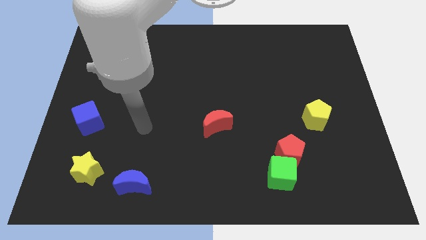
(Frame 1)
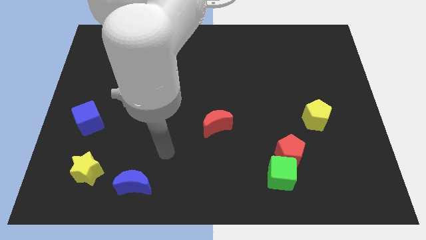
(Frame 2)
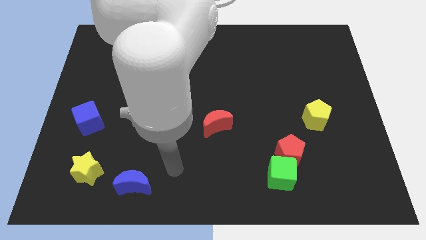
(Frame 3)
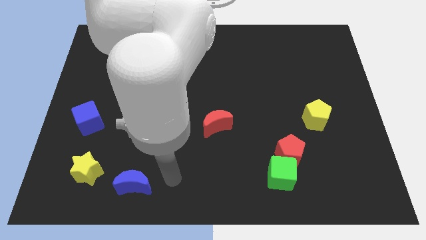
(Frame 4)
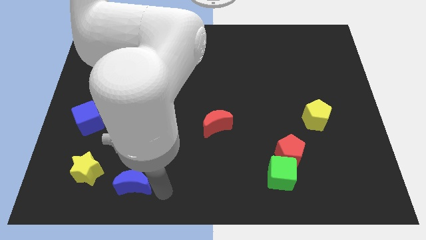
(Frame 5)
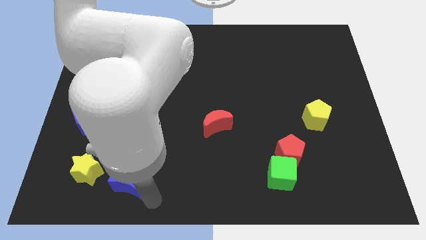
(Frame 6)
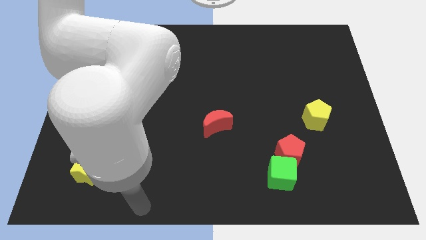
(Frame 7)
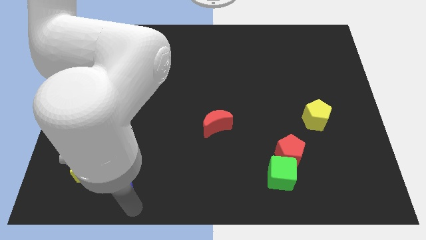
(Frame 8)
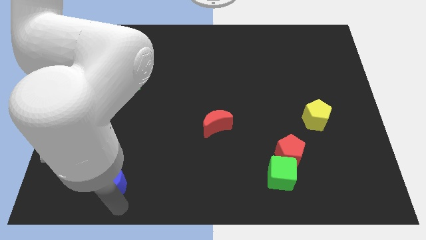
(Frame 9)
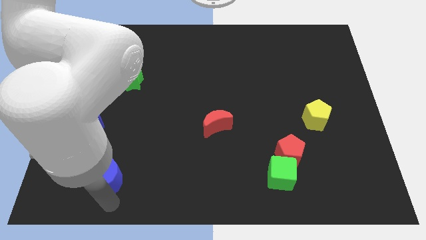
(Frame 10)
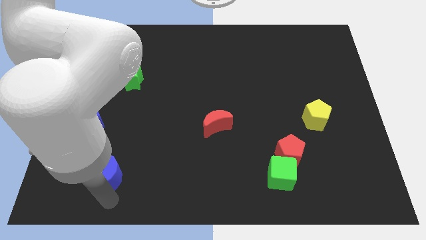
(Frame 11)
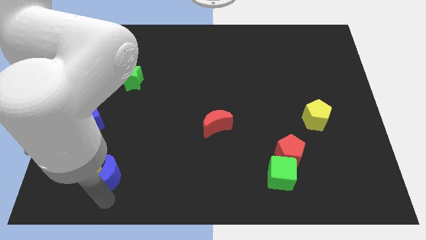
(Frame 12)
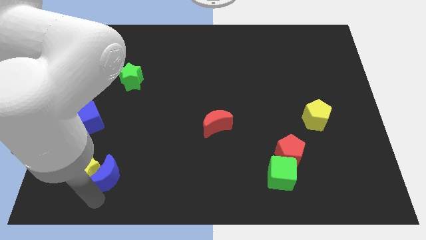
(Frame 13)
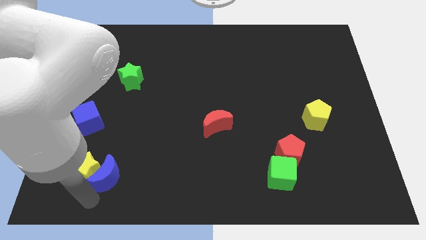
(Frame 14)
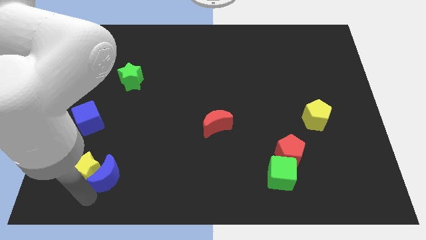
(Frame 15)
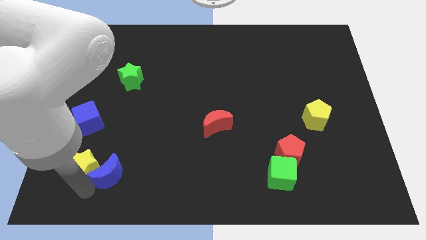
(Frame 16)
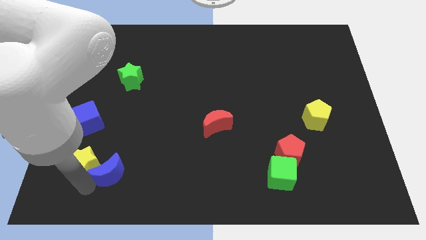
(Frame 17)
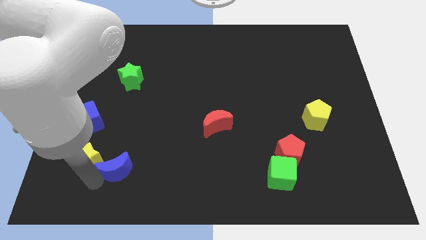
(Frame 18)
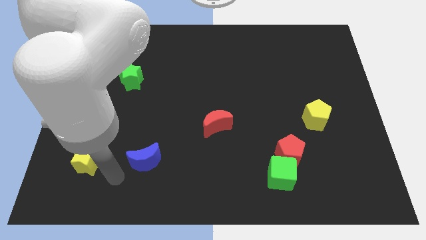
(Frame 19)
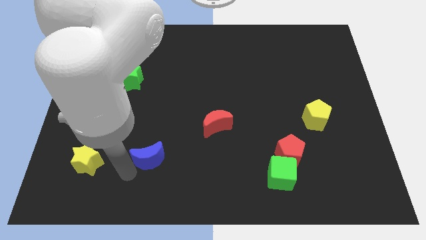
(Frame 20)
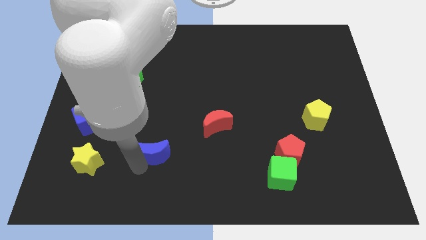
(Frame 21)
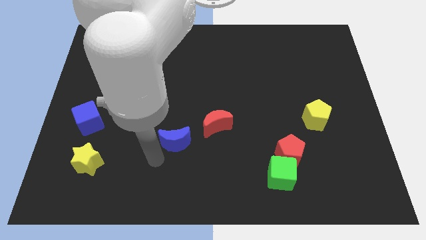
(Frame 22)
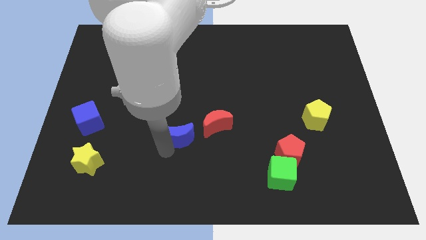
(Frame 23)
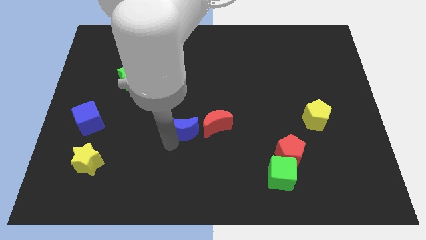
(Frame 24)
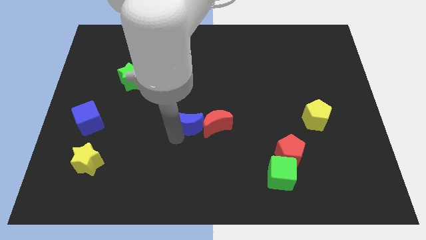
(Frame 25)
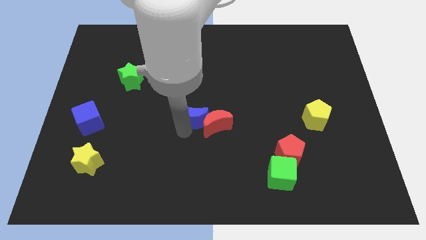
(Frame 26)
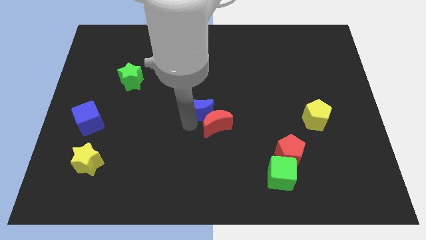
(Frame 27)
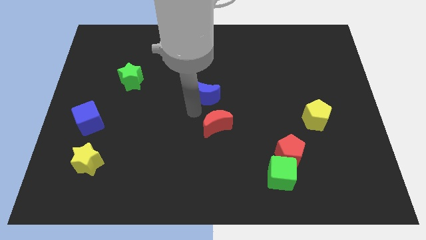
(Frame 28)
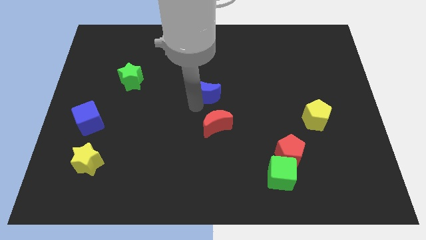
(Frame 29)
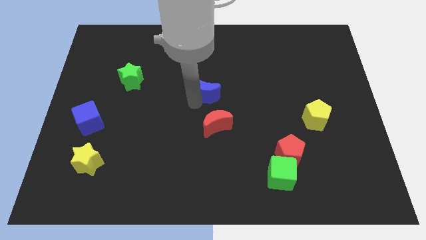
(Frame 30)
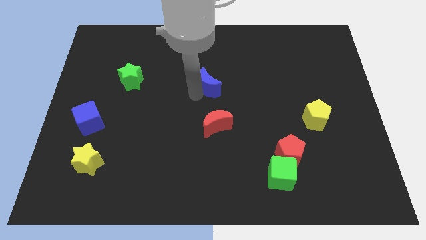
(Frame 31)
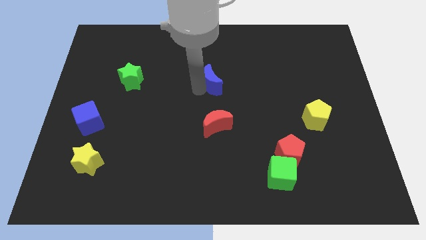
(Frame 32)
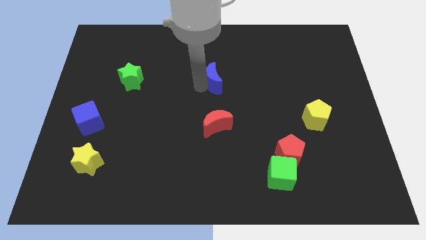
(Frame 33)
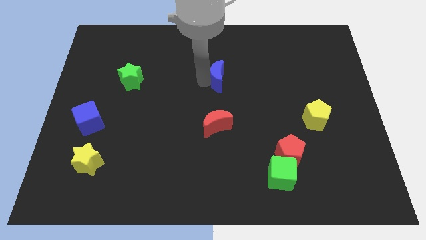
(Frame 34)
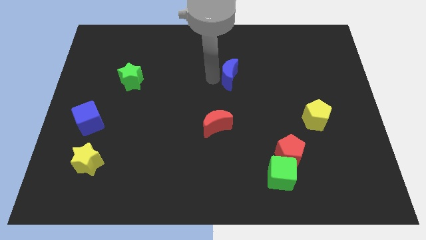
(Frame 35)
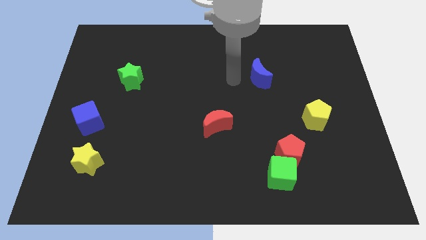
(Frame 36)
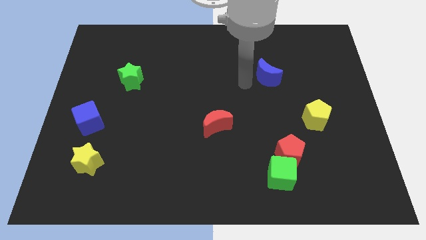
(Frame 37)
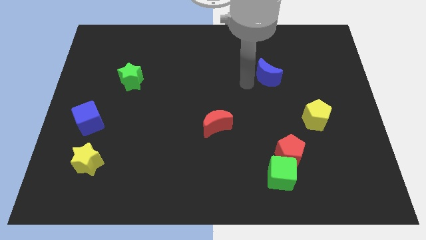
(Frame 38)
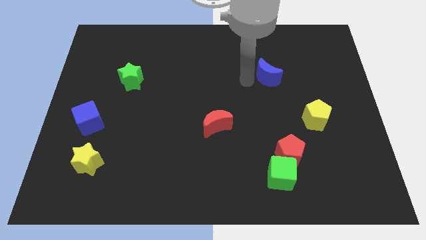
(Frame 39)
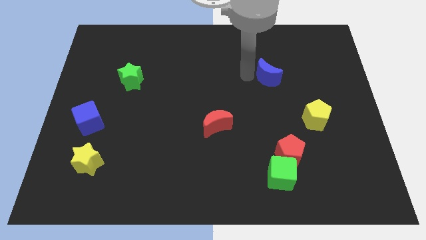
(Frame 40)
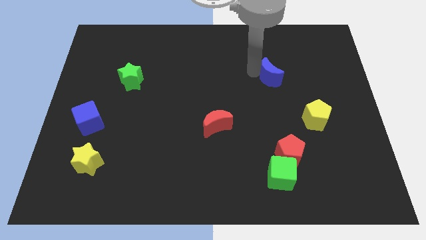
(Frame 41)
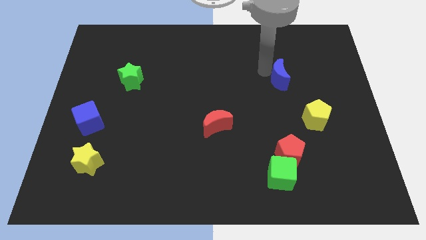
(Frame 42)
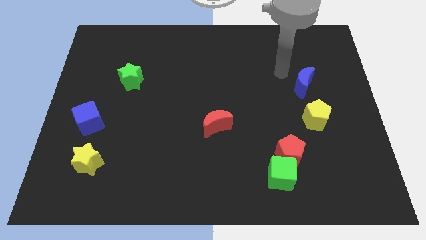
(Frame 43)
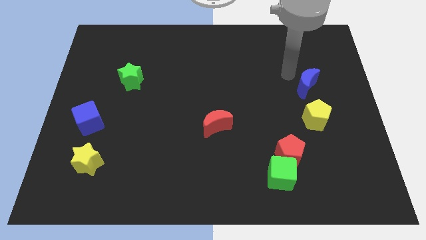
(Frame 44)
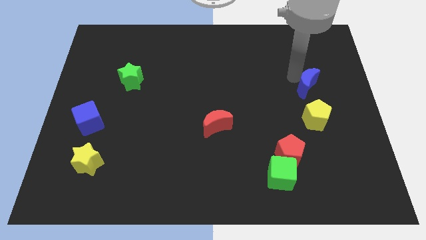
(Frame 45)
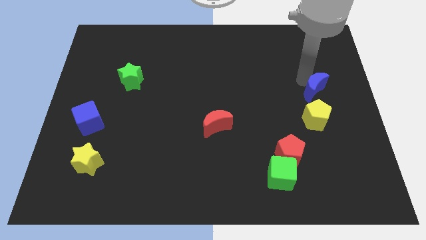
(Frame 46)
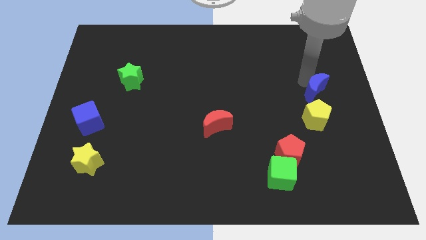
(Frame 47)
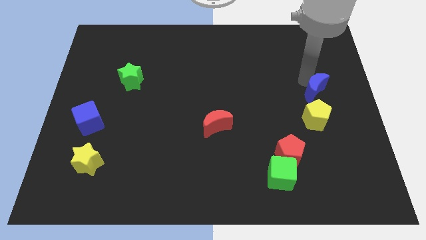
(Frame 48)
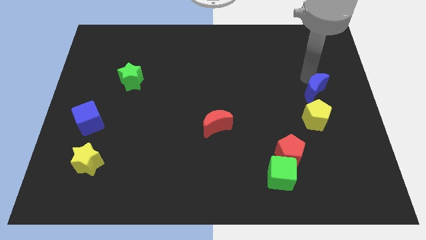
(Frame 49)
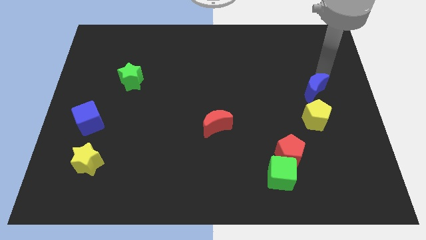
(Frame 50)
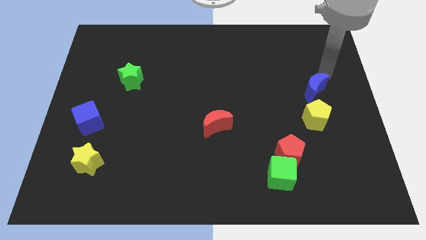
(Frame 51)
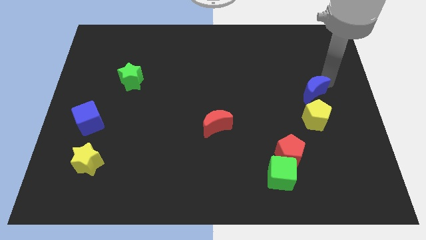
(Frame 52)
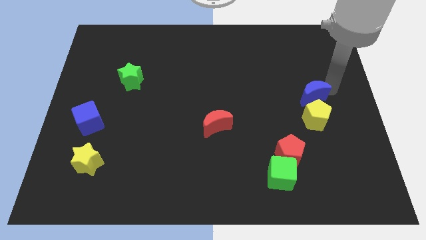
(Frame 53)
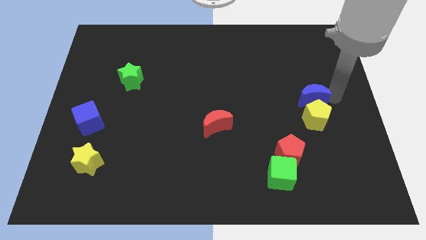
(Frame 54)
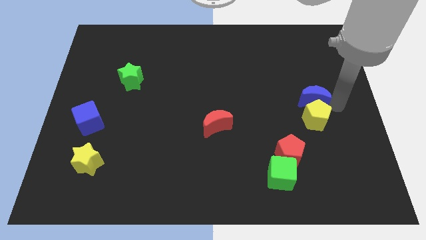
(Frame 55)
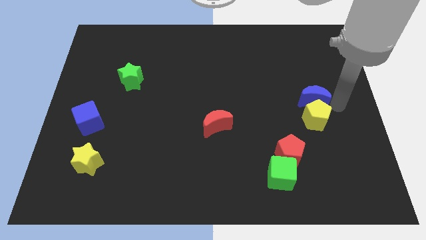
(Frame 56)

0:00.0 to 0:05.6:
put the blue moon towards the yellow pentagon

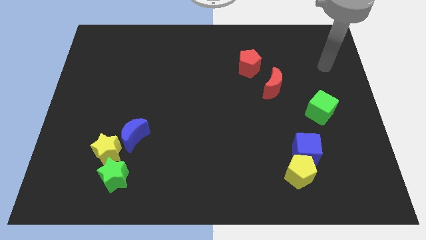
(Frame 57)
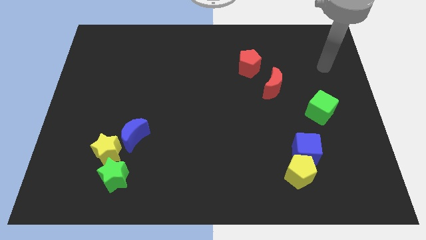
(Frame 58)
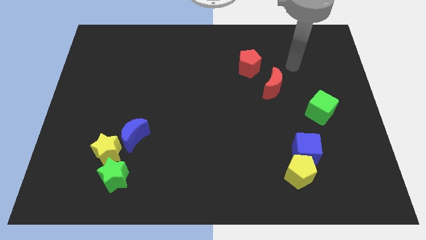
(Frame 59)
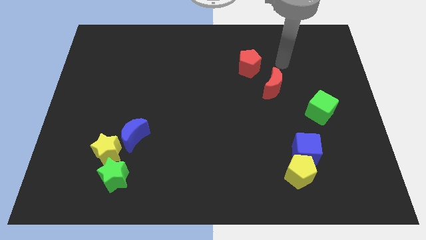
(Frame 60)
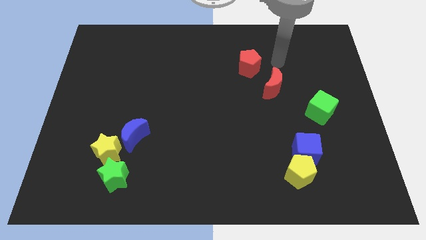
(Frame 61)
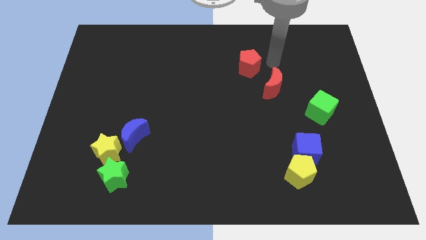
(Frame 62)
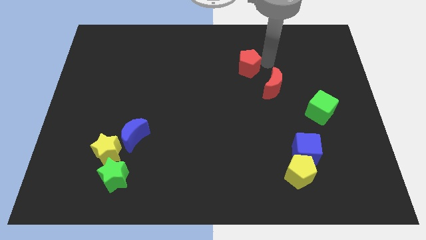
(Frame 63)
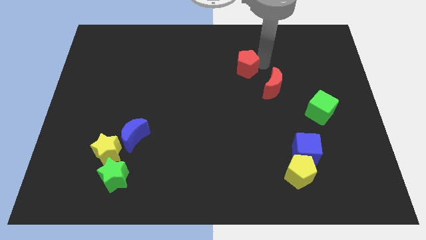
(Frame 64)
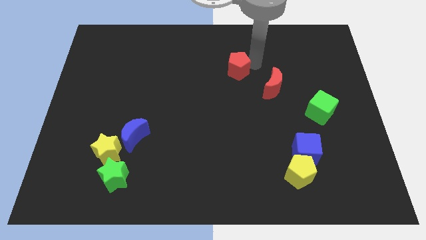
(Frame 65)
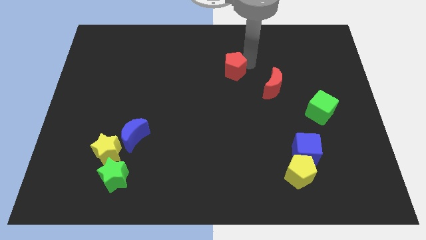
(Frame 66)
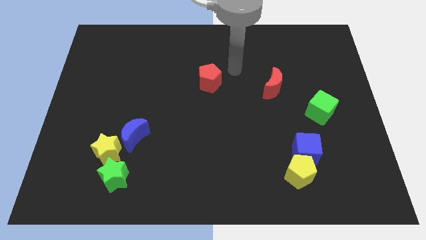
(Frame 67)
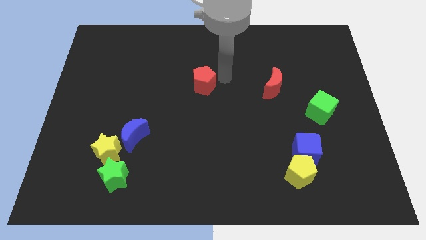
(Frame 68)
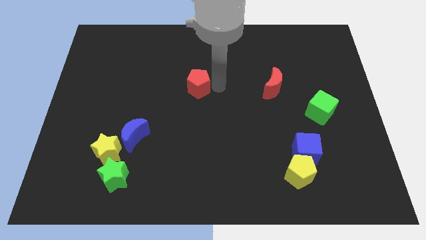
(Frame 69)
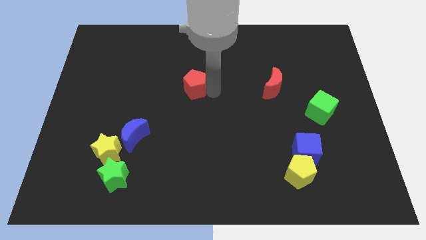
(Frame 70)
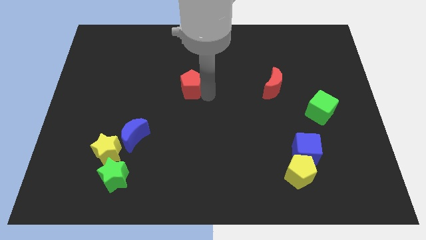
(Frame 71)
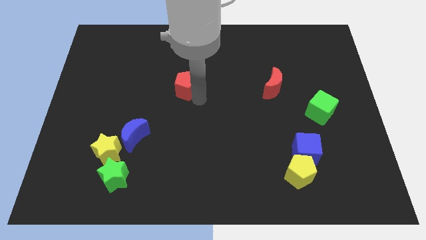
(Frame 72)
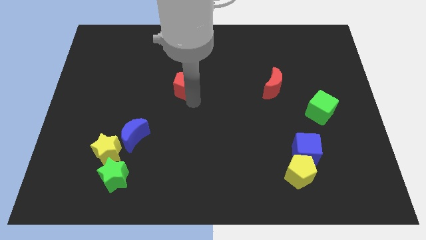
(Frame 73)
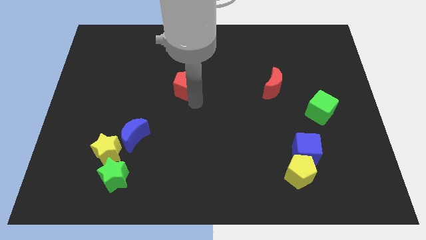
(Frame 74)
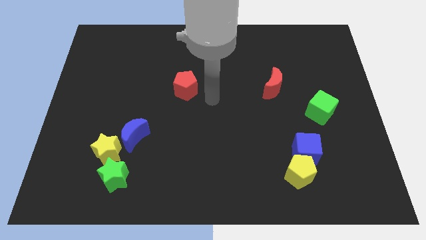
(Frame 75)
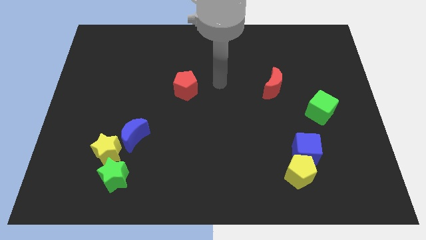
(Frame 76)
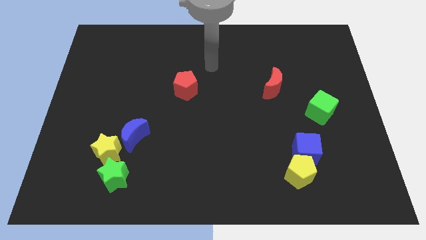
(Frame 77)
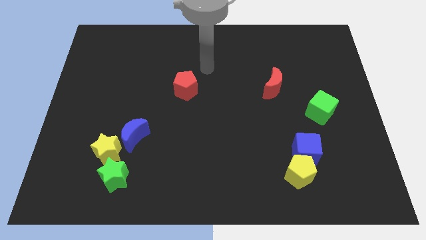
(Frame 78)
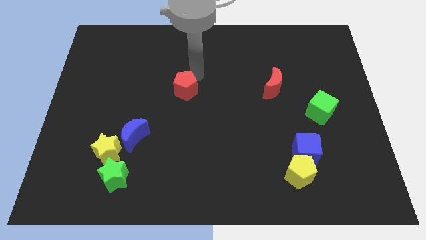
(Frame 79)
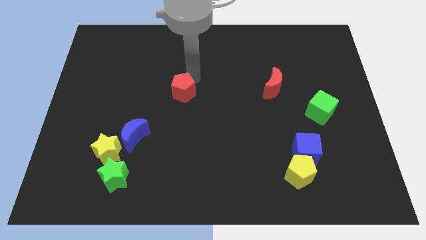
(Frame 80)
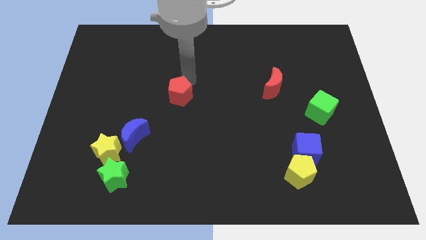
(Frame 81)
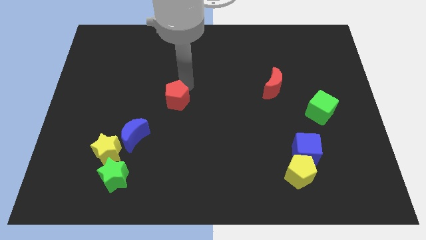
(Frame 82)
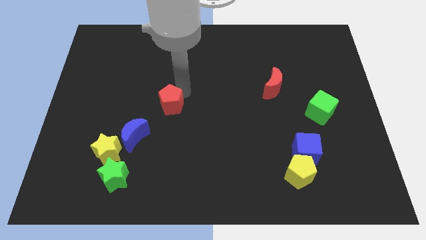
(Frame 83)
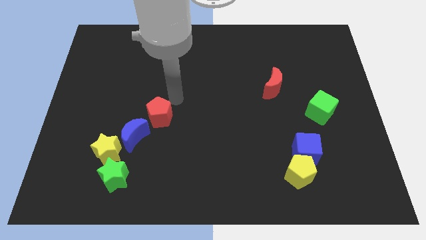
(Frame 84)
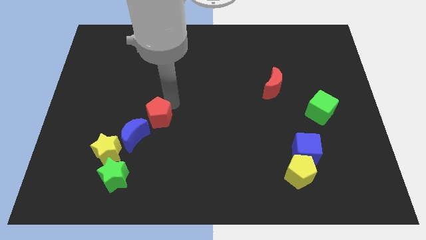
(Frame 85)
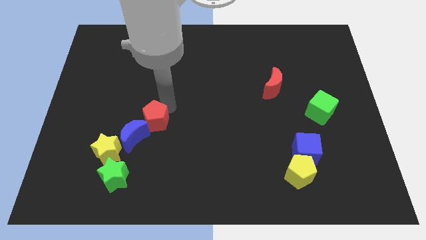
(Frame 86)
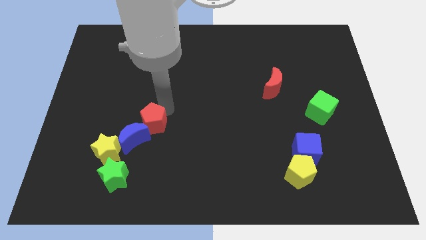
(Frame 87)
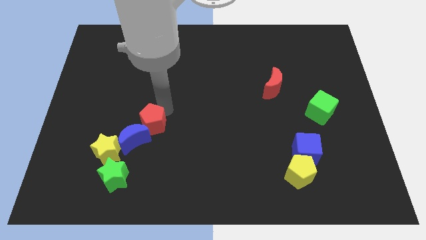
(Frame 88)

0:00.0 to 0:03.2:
push the red pentagon to the blue moon
